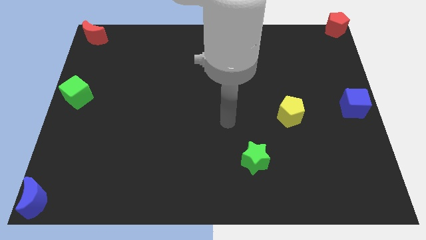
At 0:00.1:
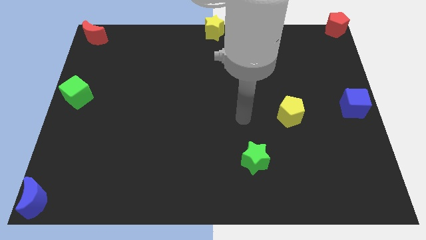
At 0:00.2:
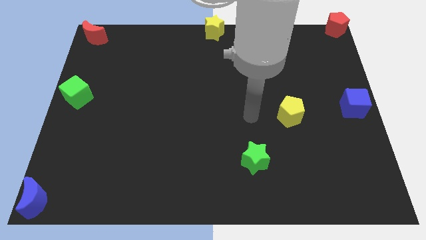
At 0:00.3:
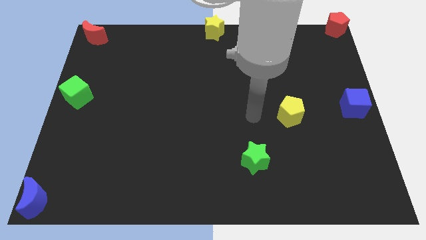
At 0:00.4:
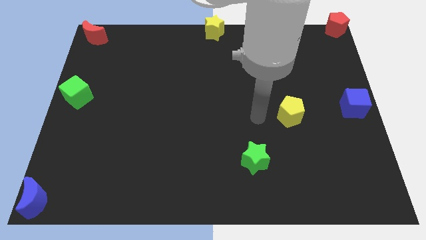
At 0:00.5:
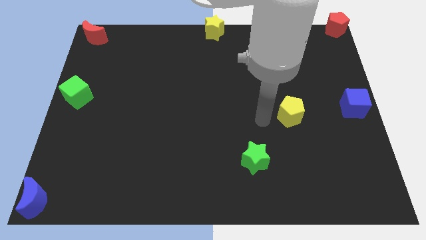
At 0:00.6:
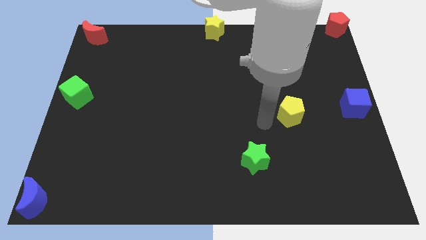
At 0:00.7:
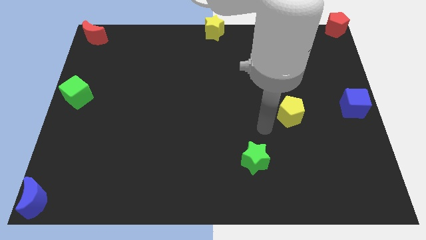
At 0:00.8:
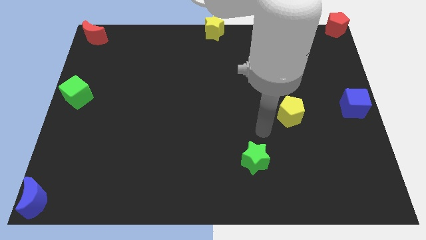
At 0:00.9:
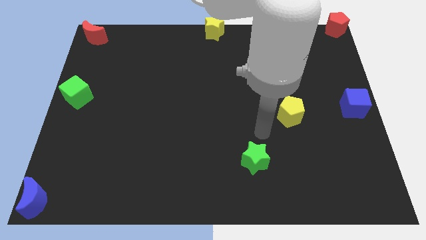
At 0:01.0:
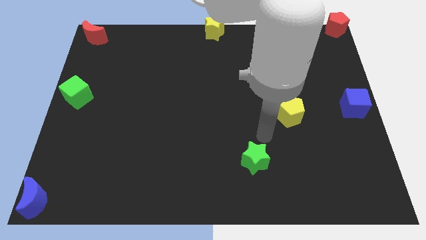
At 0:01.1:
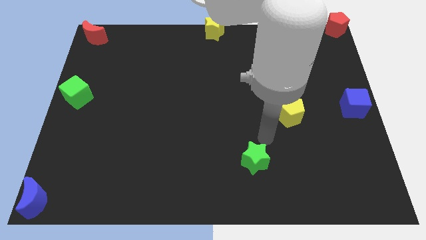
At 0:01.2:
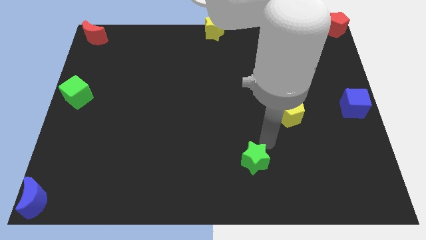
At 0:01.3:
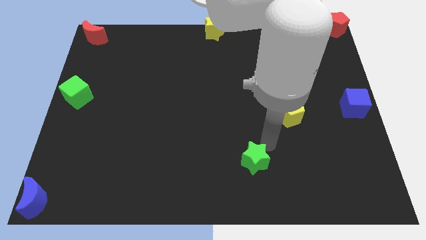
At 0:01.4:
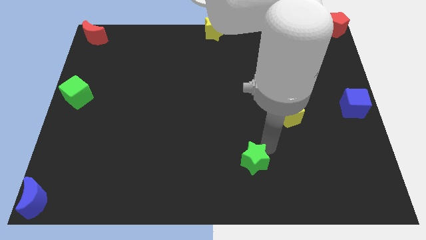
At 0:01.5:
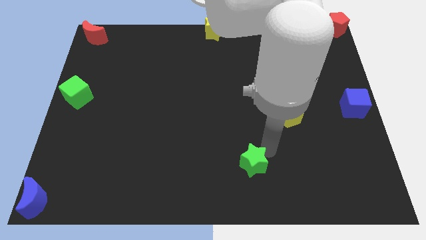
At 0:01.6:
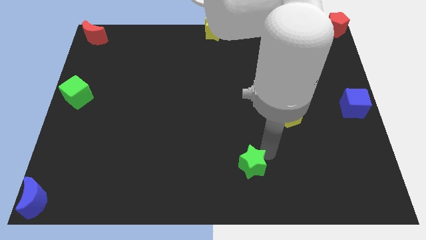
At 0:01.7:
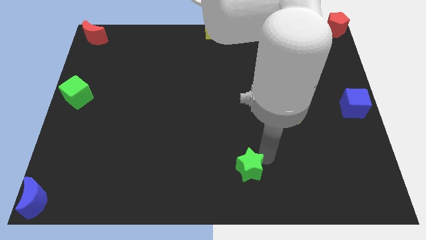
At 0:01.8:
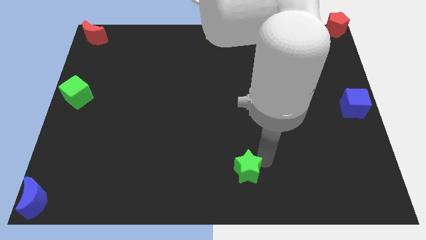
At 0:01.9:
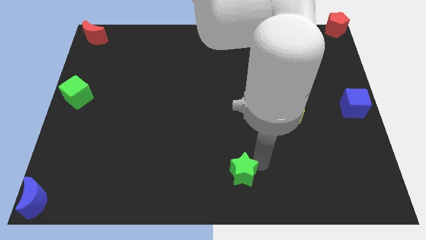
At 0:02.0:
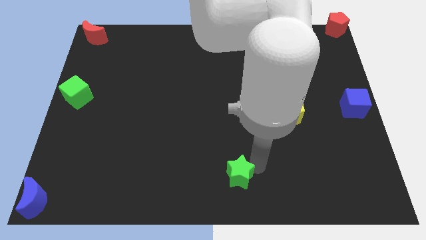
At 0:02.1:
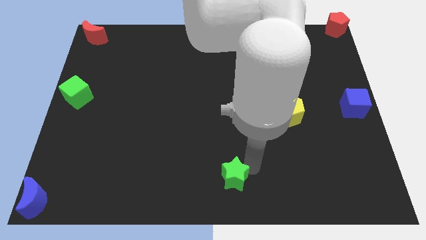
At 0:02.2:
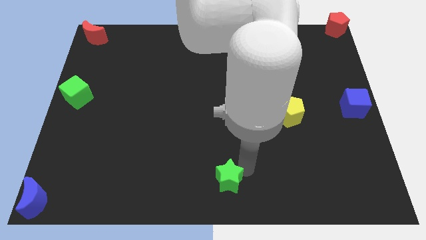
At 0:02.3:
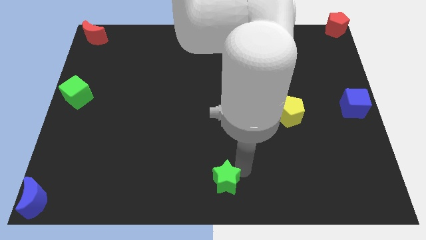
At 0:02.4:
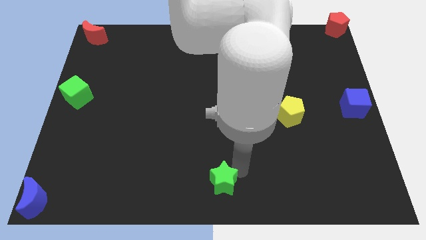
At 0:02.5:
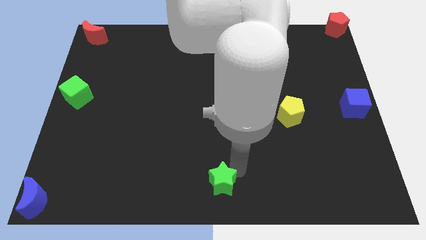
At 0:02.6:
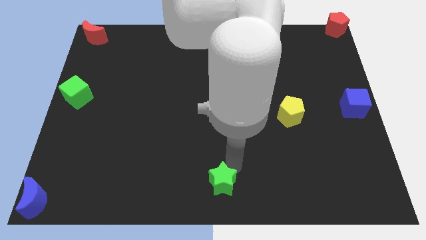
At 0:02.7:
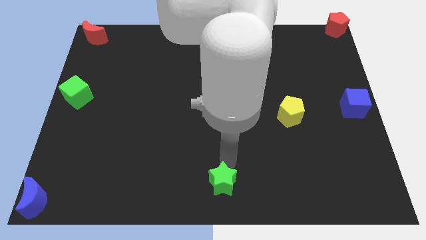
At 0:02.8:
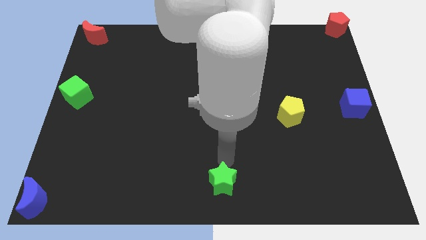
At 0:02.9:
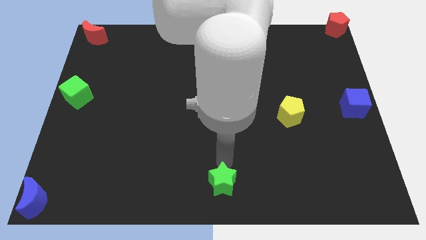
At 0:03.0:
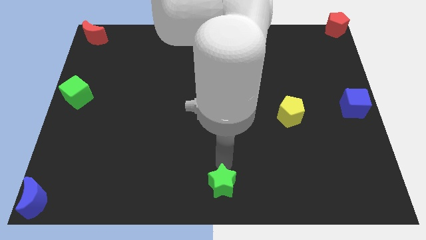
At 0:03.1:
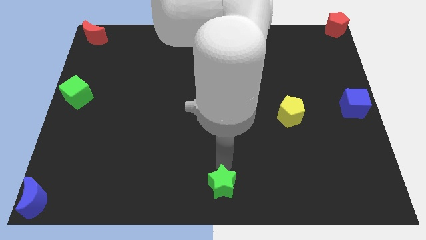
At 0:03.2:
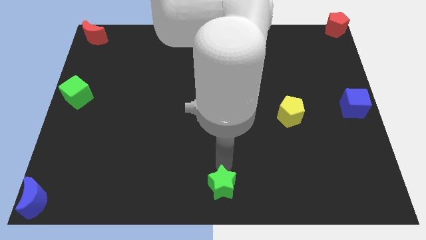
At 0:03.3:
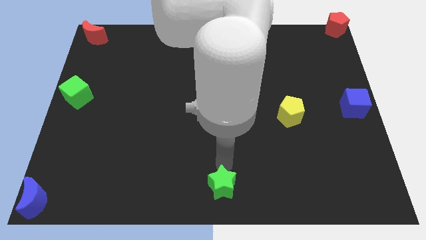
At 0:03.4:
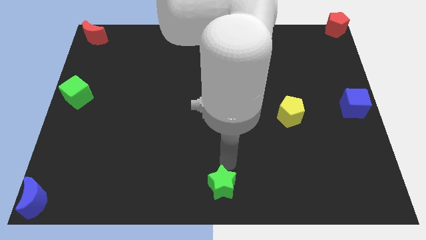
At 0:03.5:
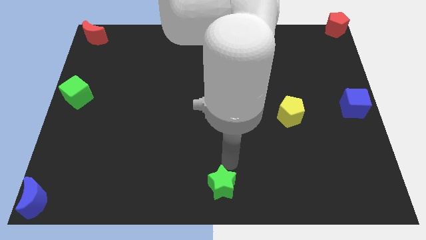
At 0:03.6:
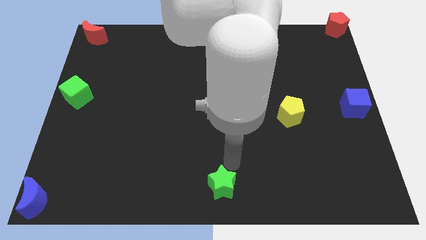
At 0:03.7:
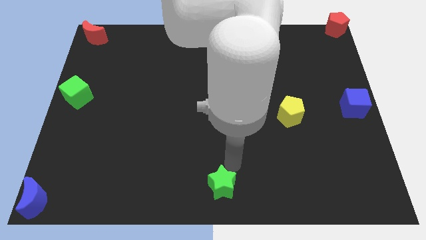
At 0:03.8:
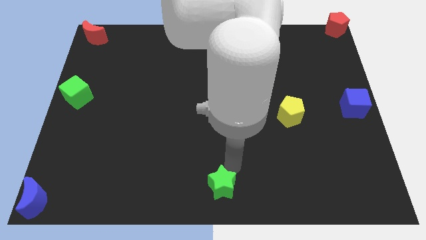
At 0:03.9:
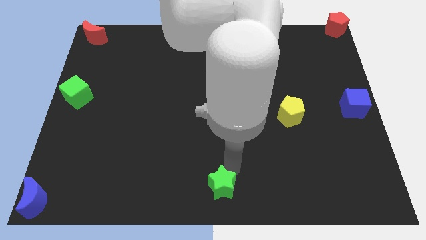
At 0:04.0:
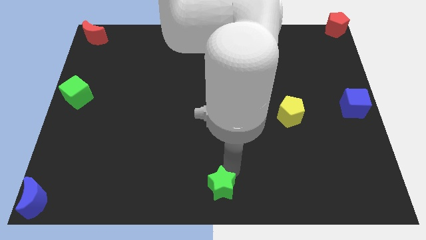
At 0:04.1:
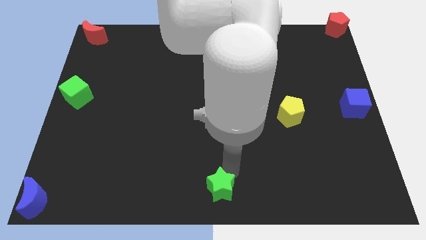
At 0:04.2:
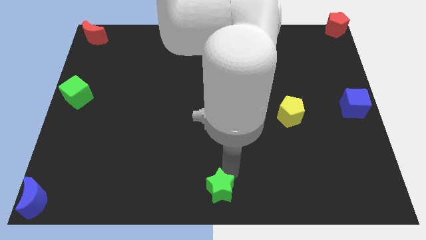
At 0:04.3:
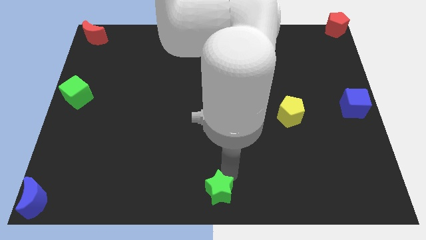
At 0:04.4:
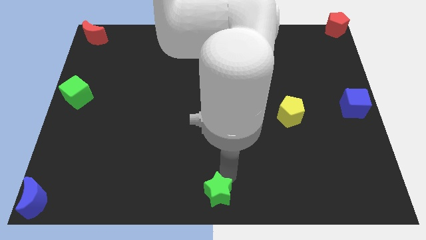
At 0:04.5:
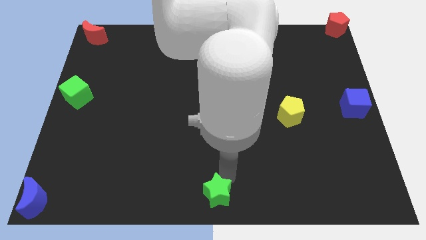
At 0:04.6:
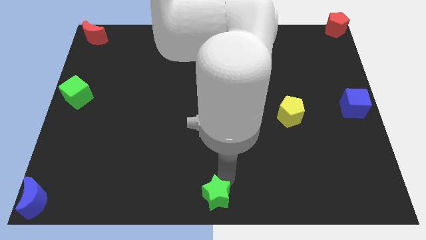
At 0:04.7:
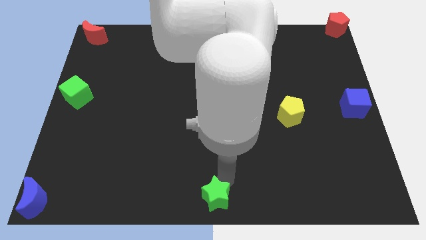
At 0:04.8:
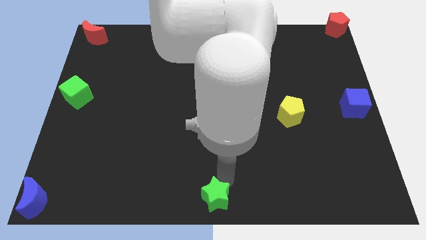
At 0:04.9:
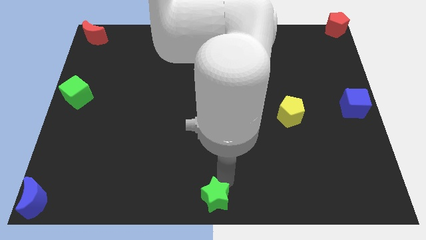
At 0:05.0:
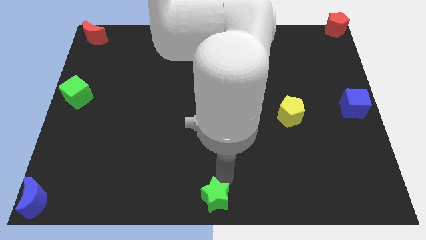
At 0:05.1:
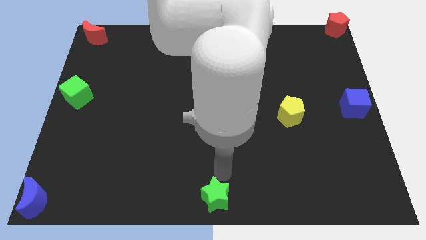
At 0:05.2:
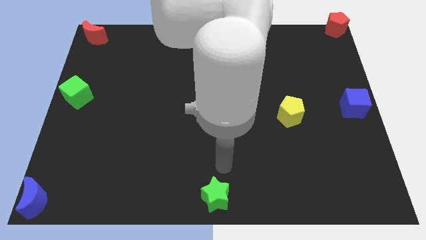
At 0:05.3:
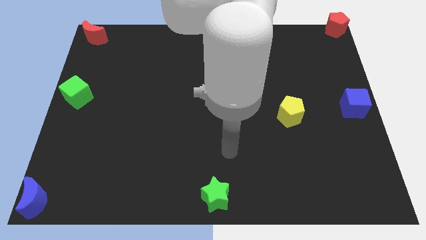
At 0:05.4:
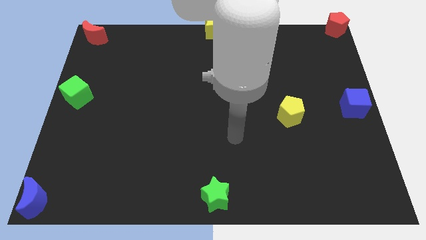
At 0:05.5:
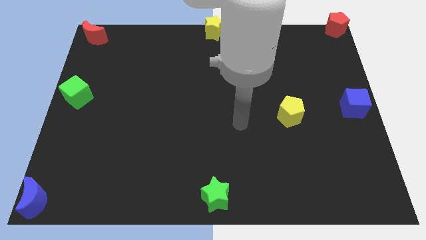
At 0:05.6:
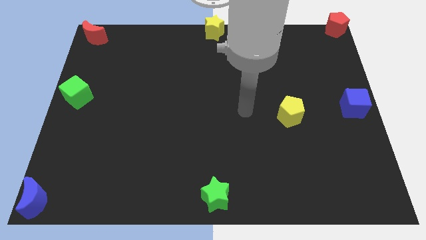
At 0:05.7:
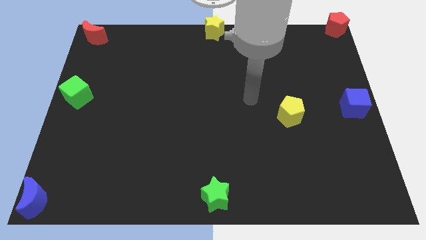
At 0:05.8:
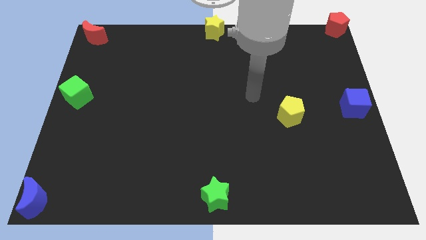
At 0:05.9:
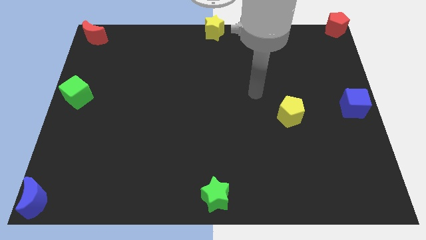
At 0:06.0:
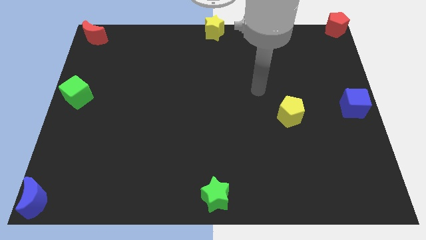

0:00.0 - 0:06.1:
move the green star to the bottom center

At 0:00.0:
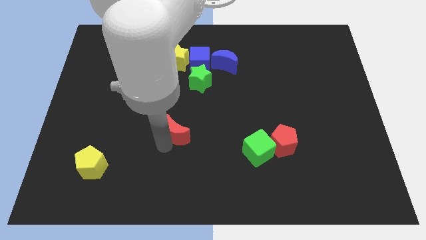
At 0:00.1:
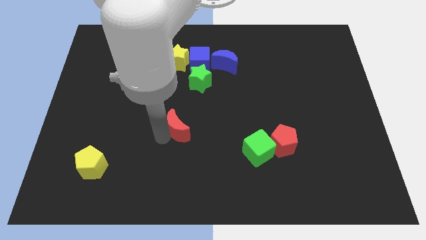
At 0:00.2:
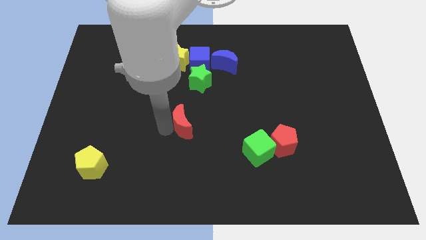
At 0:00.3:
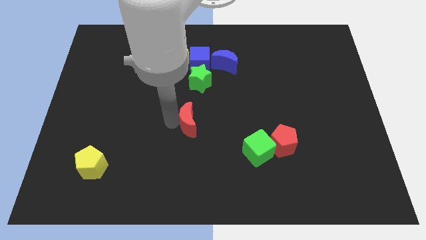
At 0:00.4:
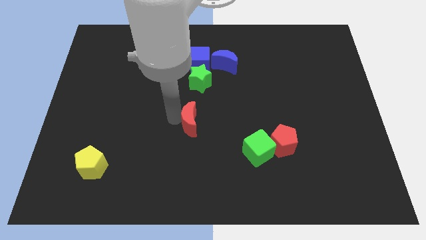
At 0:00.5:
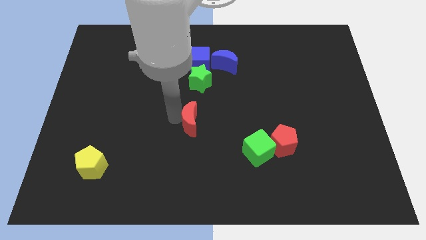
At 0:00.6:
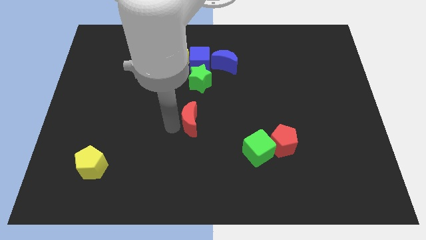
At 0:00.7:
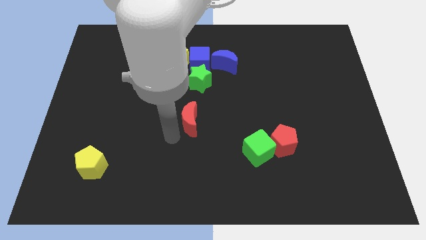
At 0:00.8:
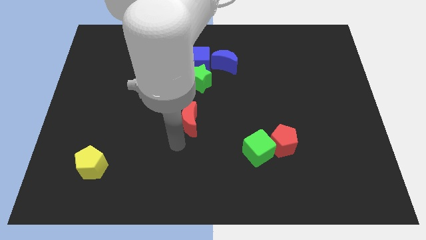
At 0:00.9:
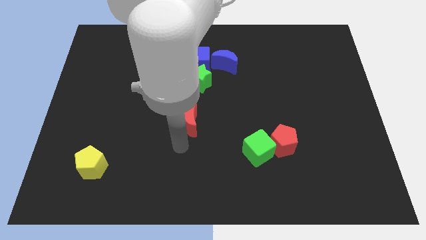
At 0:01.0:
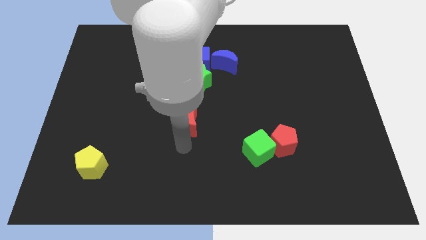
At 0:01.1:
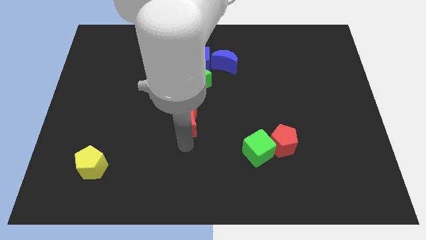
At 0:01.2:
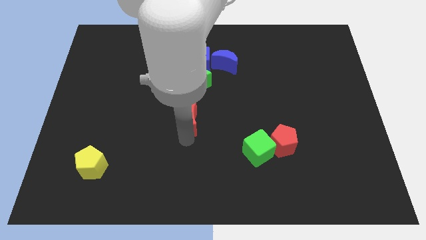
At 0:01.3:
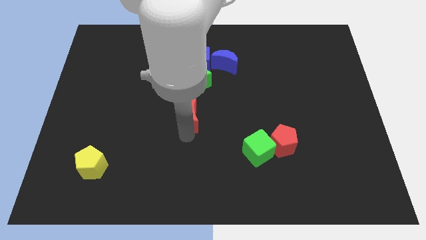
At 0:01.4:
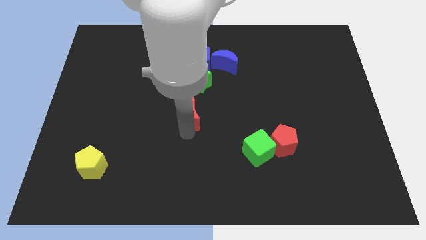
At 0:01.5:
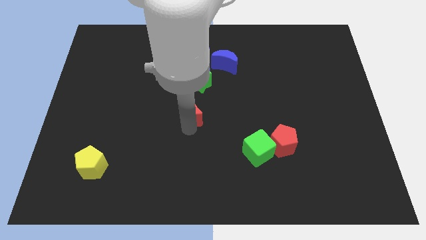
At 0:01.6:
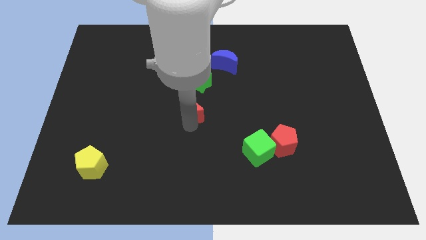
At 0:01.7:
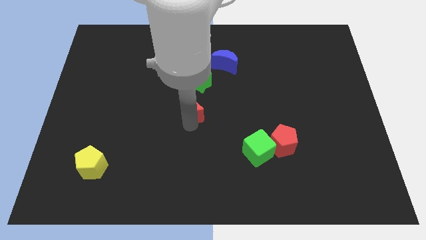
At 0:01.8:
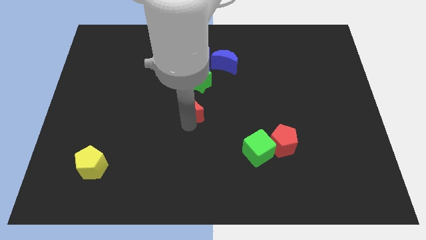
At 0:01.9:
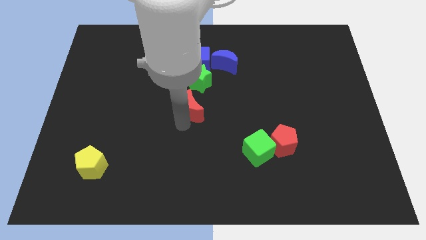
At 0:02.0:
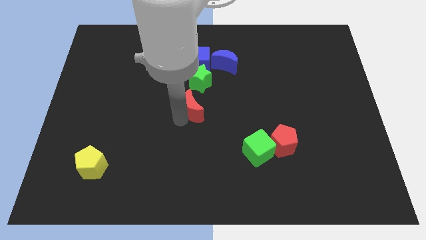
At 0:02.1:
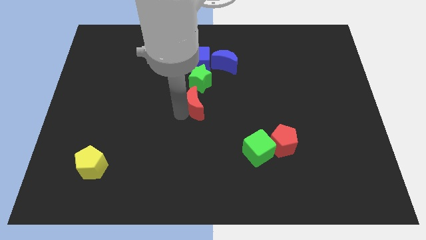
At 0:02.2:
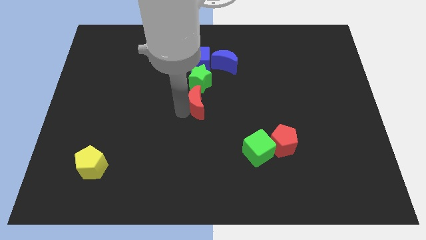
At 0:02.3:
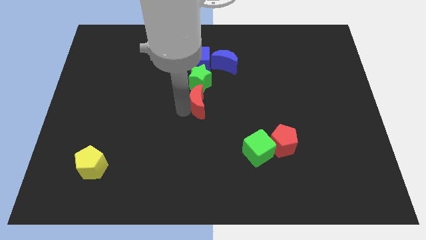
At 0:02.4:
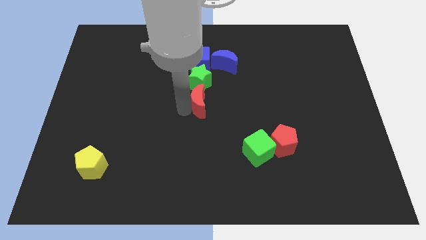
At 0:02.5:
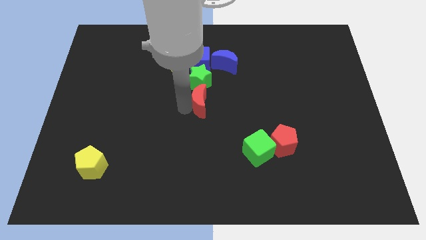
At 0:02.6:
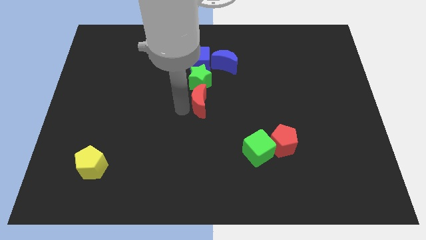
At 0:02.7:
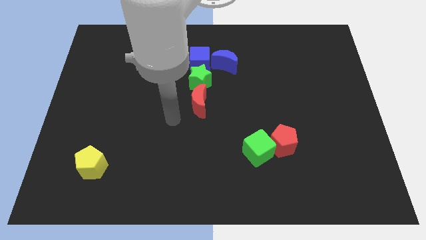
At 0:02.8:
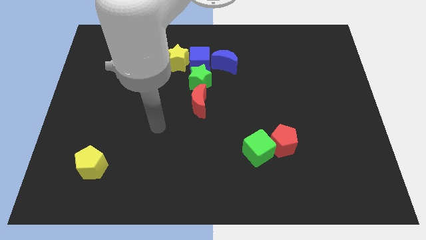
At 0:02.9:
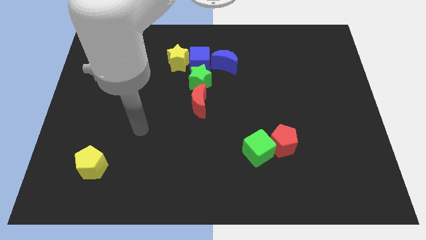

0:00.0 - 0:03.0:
slide the red moon vertically below the green star
